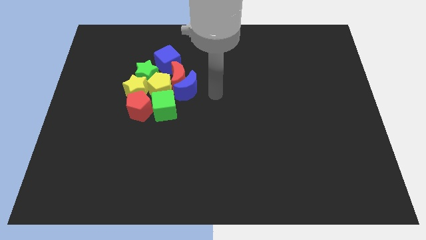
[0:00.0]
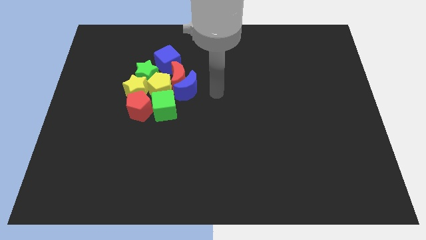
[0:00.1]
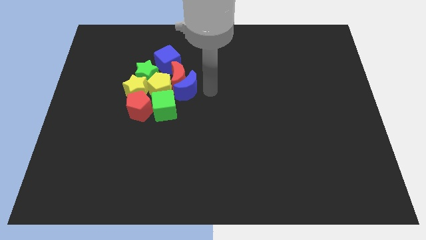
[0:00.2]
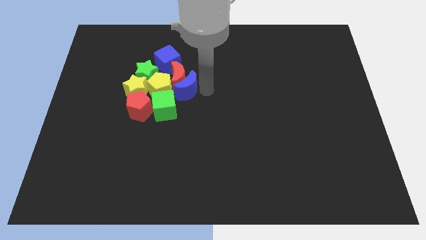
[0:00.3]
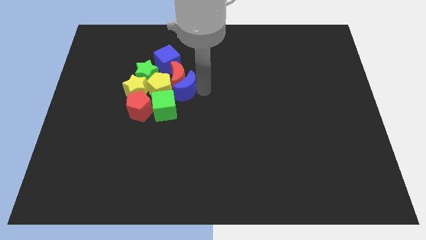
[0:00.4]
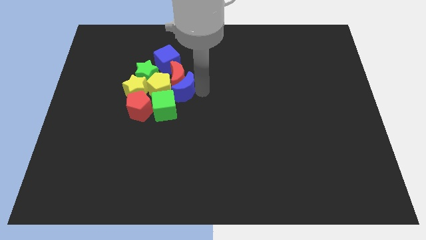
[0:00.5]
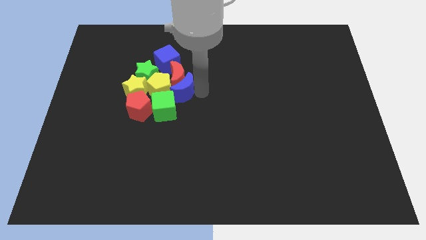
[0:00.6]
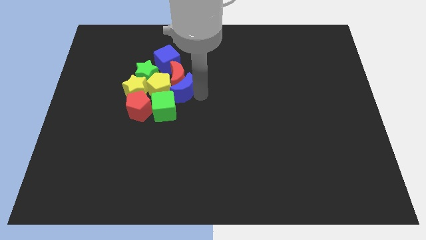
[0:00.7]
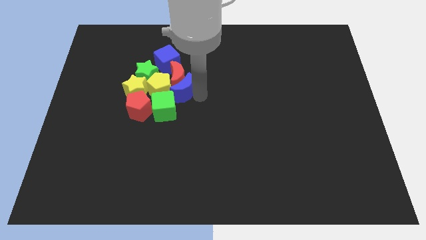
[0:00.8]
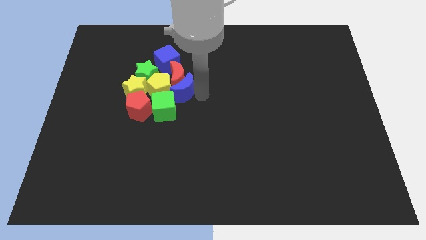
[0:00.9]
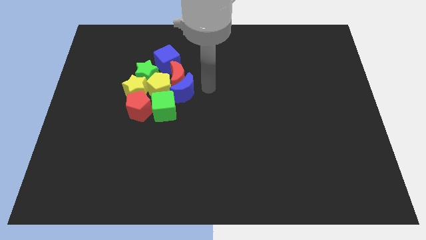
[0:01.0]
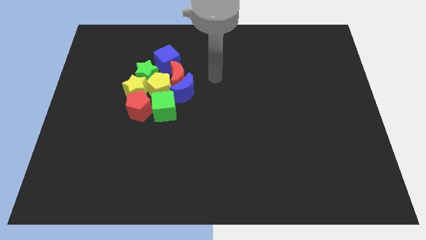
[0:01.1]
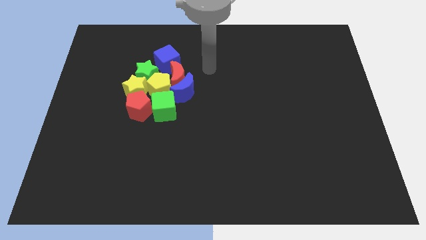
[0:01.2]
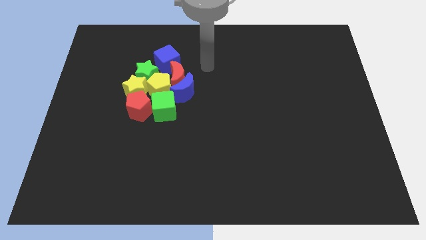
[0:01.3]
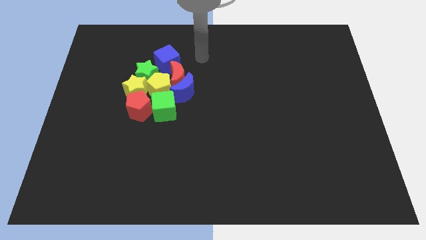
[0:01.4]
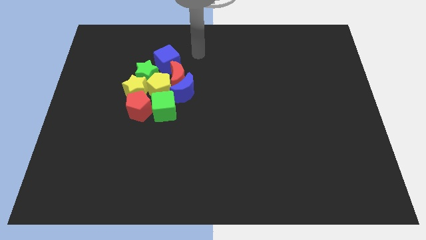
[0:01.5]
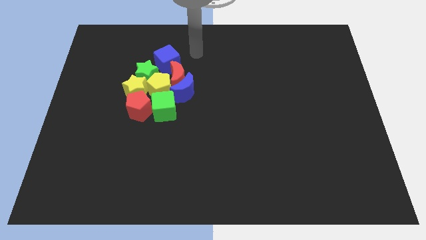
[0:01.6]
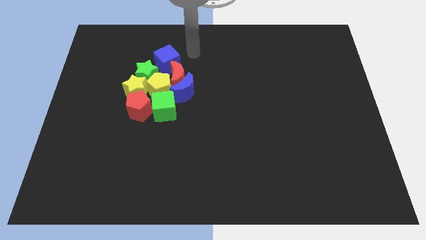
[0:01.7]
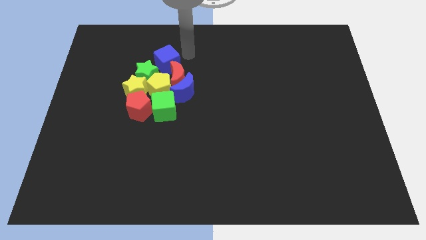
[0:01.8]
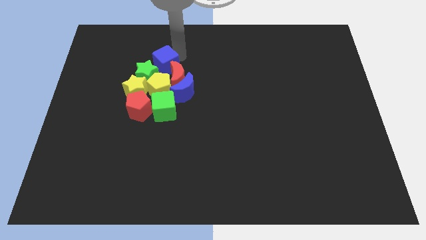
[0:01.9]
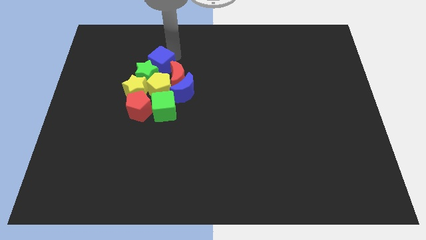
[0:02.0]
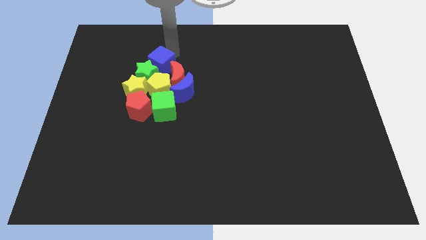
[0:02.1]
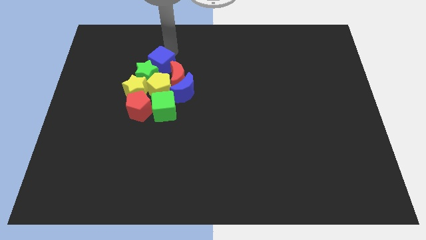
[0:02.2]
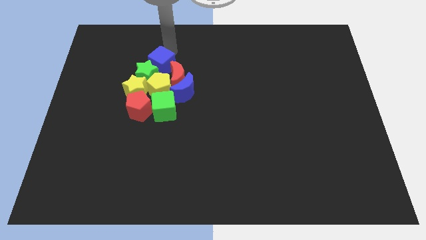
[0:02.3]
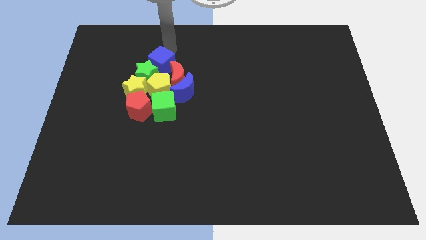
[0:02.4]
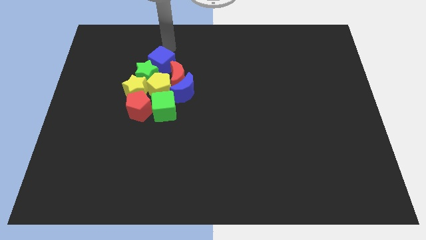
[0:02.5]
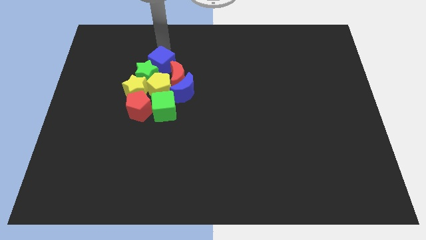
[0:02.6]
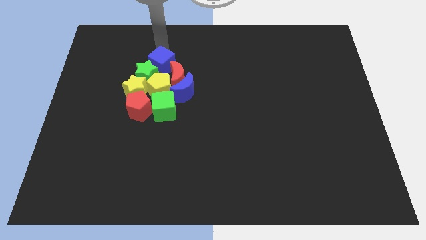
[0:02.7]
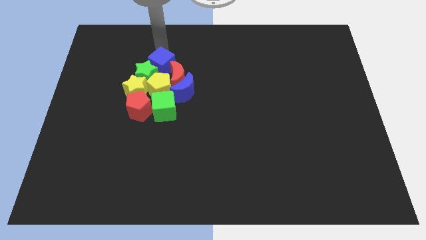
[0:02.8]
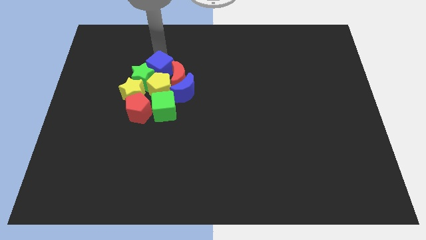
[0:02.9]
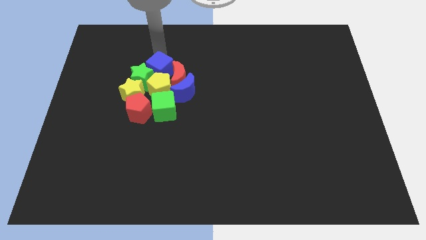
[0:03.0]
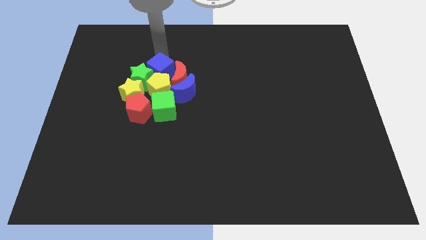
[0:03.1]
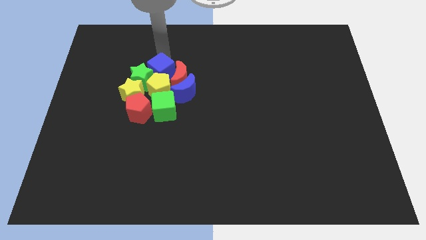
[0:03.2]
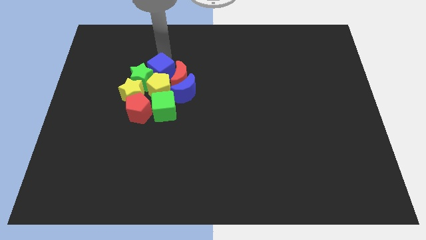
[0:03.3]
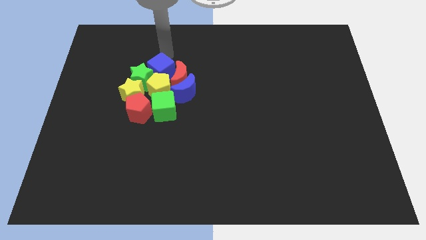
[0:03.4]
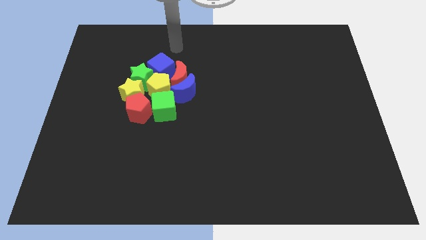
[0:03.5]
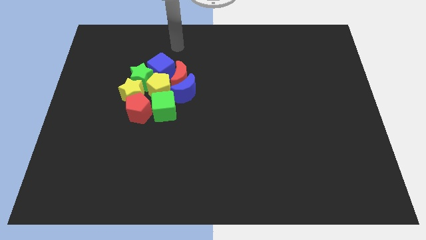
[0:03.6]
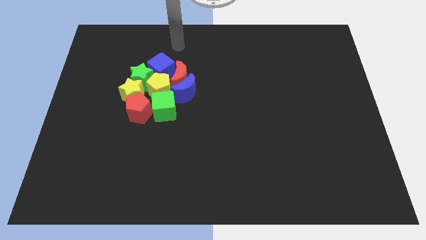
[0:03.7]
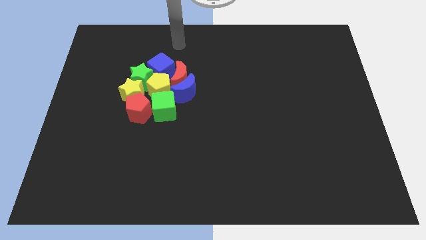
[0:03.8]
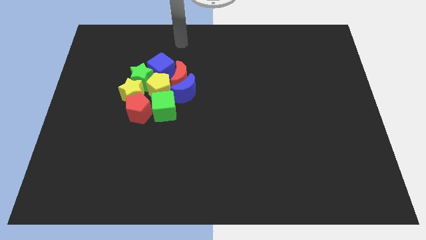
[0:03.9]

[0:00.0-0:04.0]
adjust blue blocks and the red moon to form a diagonal line

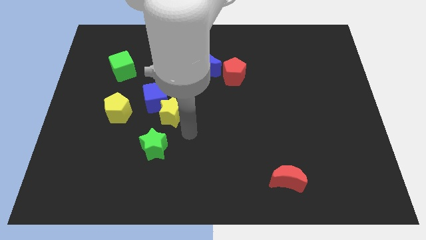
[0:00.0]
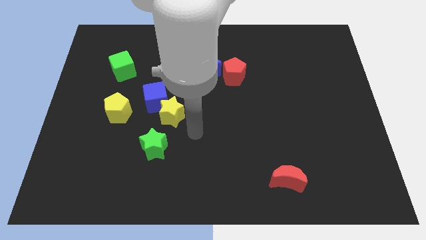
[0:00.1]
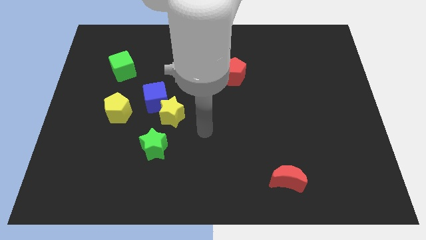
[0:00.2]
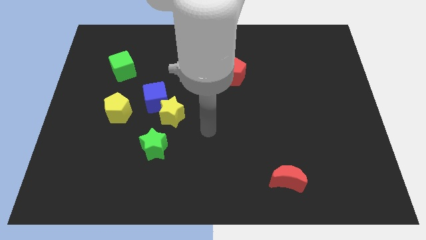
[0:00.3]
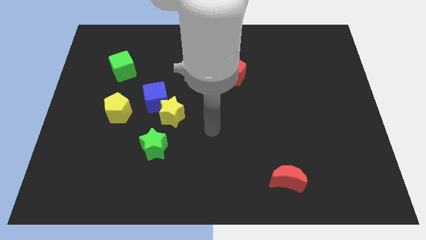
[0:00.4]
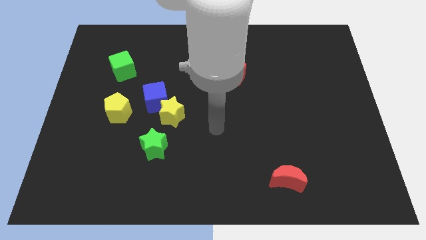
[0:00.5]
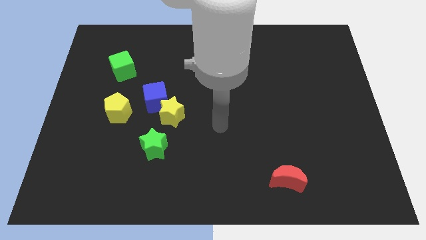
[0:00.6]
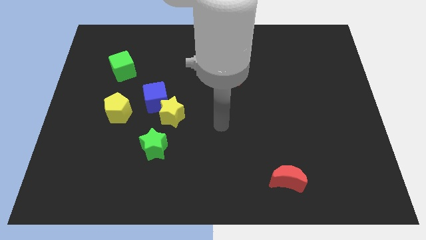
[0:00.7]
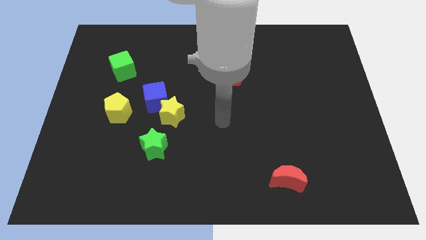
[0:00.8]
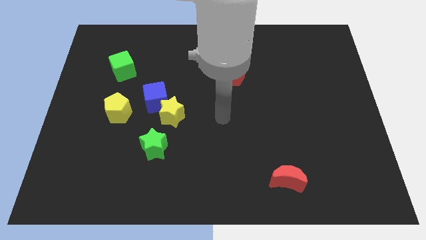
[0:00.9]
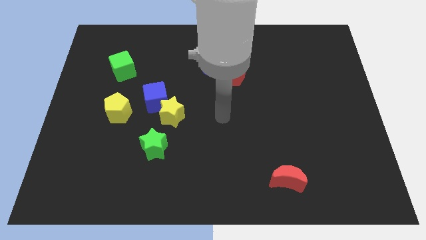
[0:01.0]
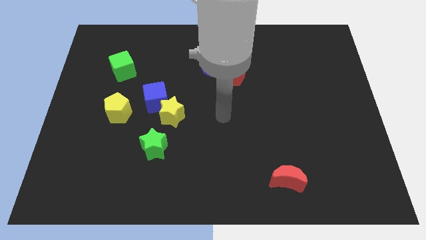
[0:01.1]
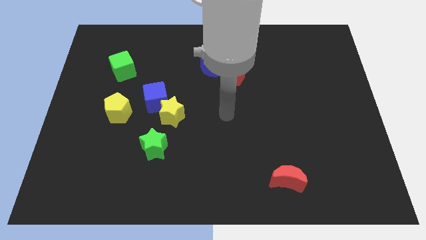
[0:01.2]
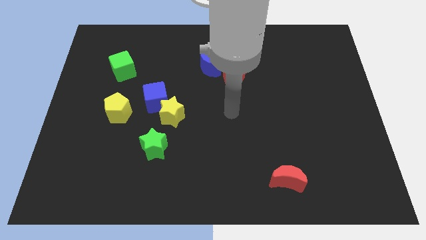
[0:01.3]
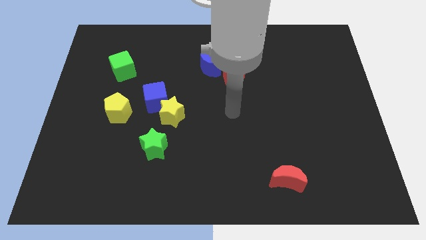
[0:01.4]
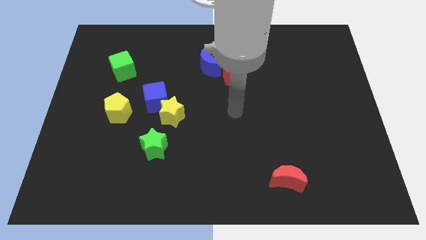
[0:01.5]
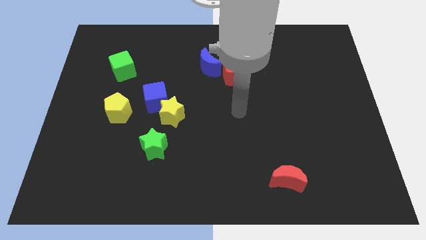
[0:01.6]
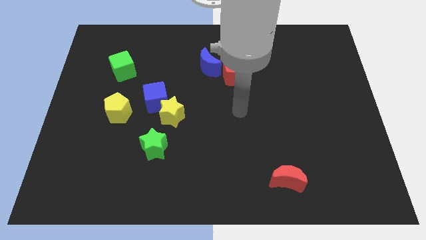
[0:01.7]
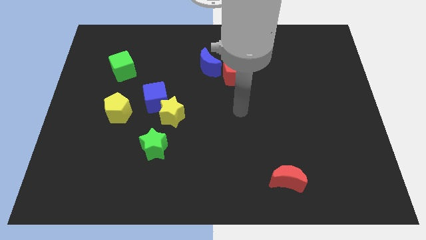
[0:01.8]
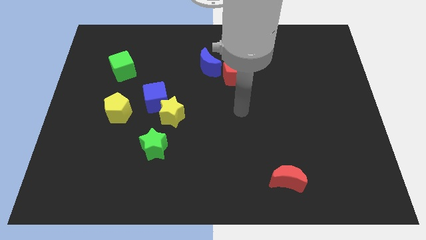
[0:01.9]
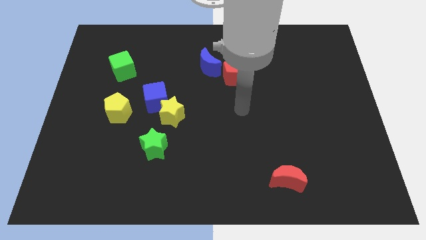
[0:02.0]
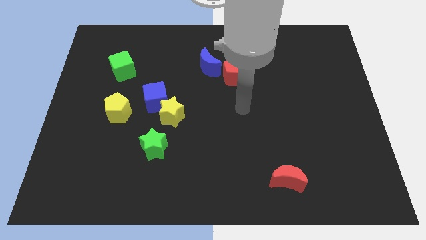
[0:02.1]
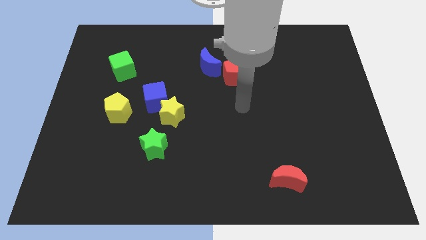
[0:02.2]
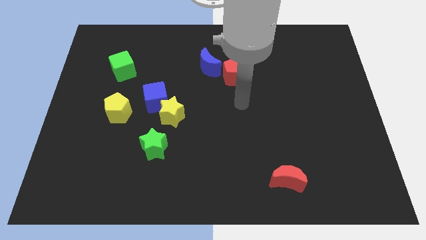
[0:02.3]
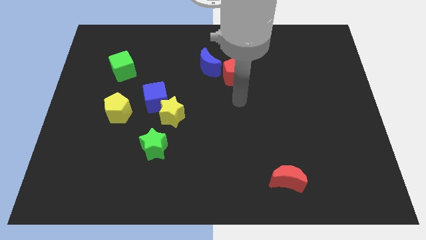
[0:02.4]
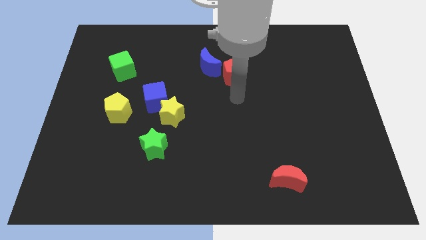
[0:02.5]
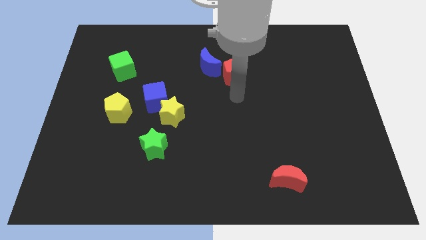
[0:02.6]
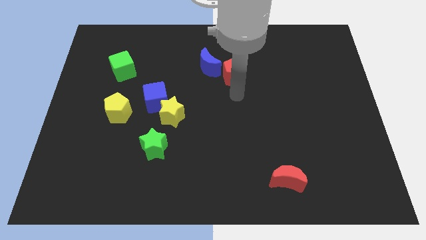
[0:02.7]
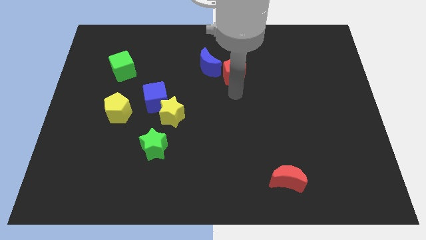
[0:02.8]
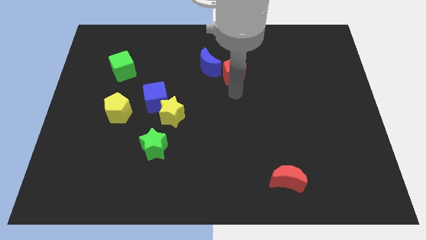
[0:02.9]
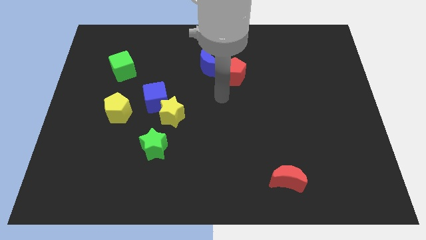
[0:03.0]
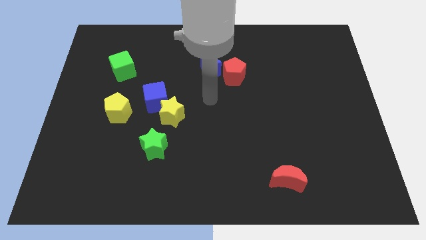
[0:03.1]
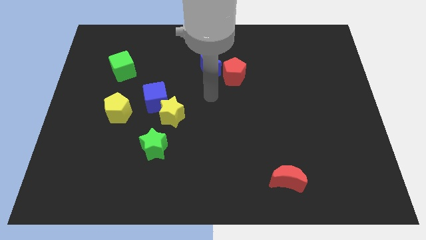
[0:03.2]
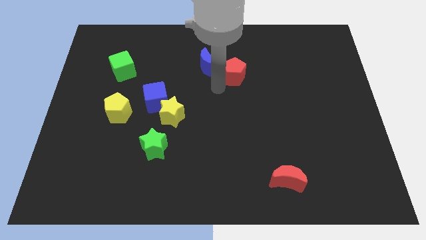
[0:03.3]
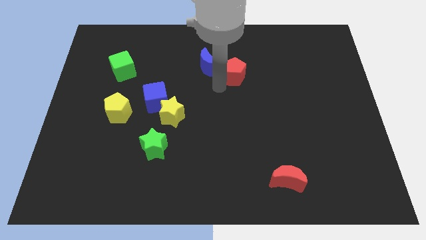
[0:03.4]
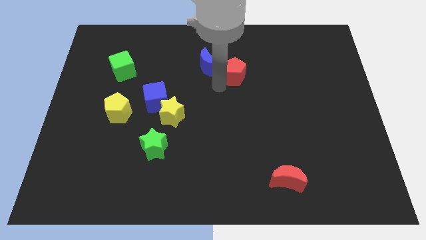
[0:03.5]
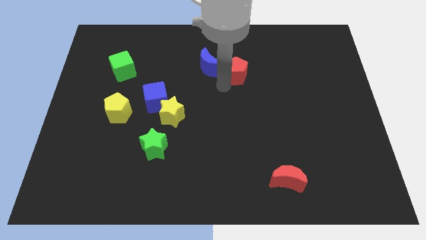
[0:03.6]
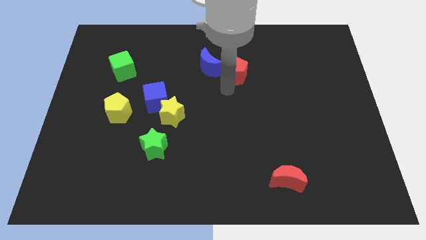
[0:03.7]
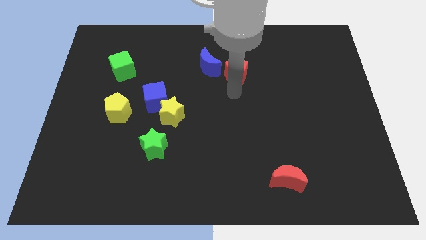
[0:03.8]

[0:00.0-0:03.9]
move the red pentagon slightly upwards

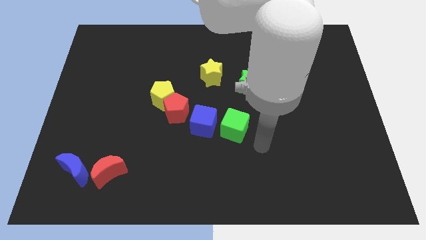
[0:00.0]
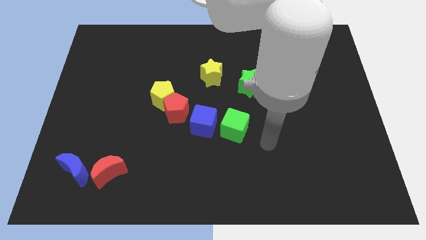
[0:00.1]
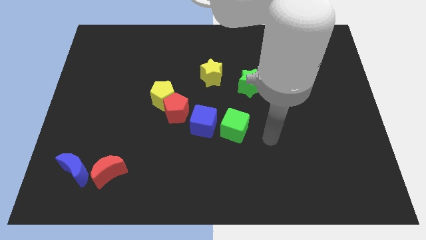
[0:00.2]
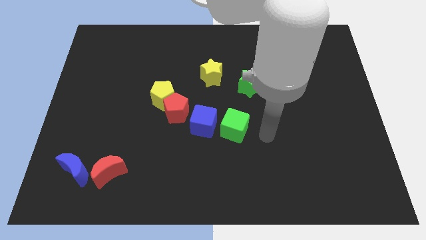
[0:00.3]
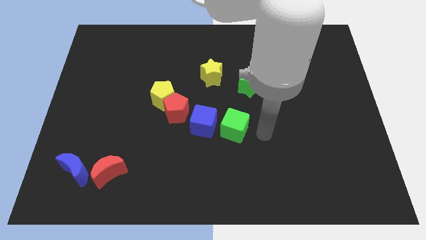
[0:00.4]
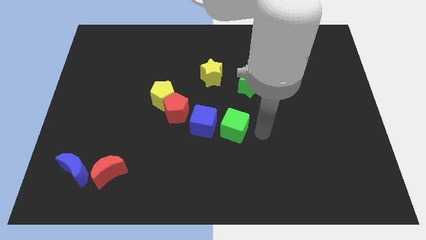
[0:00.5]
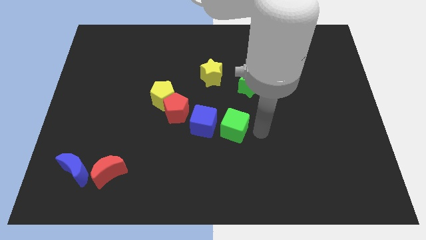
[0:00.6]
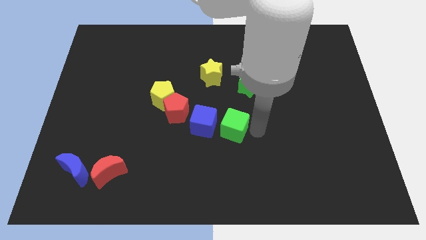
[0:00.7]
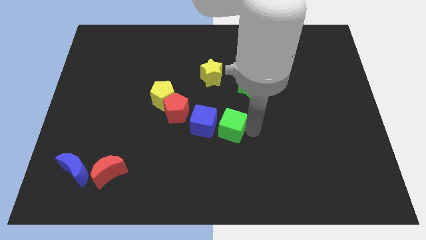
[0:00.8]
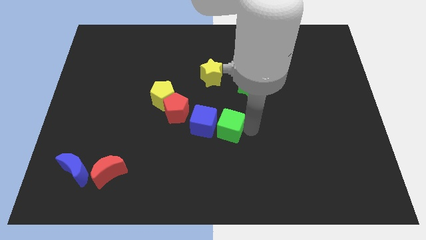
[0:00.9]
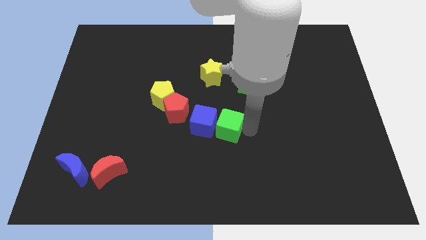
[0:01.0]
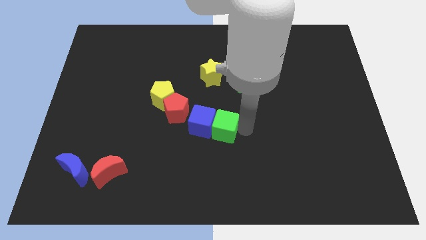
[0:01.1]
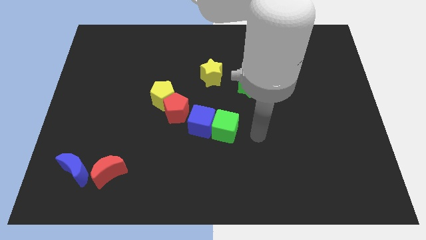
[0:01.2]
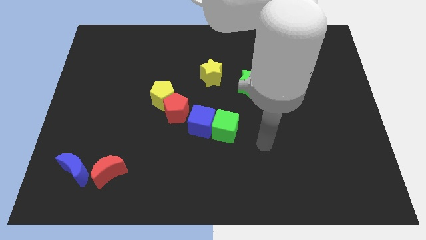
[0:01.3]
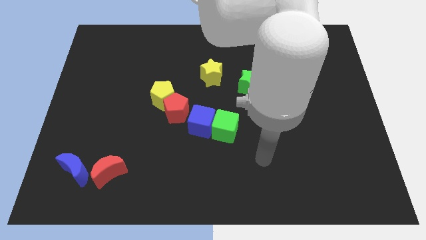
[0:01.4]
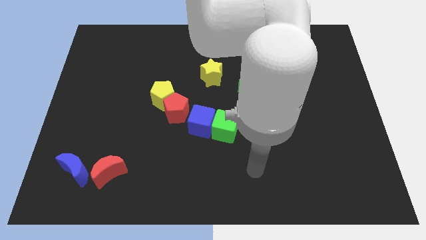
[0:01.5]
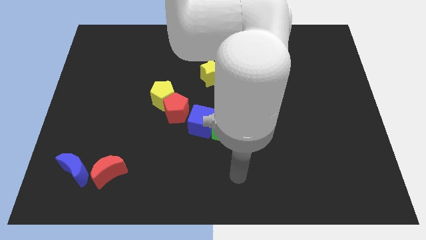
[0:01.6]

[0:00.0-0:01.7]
move green cube into blue cube
